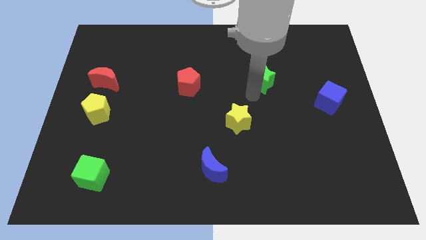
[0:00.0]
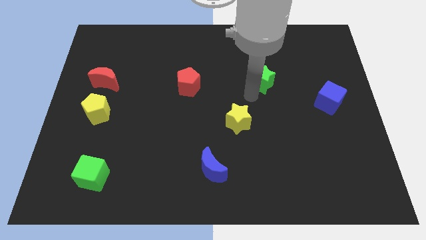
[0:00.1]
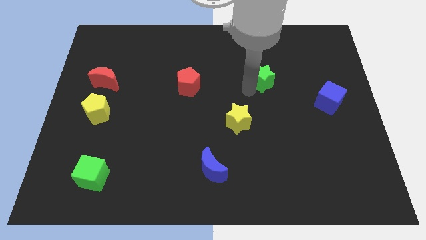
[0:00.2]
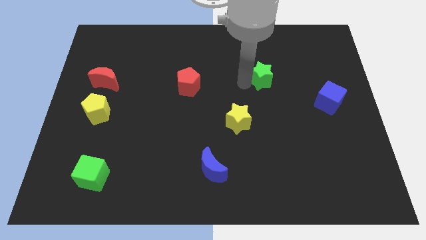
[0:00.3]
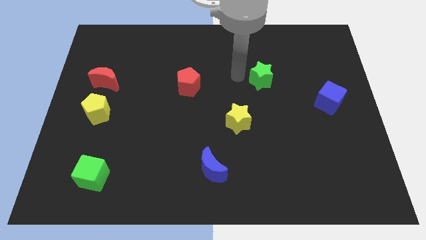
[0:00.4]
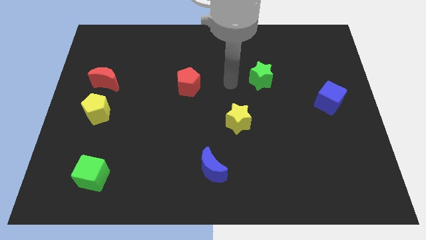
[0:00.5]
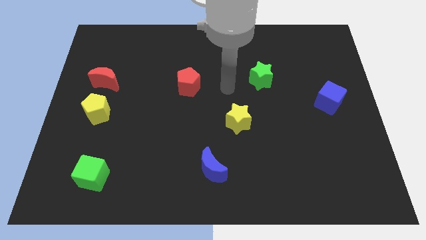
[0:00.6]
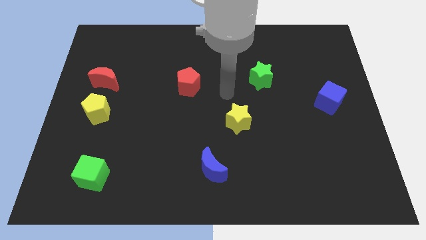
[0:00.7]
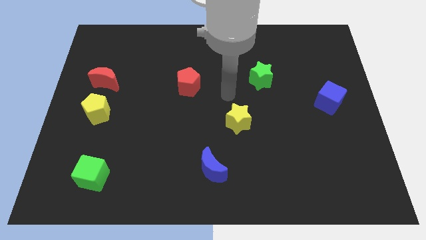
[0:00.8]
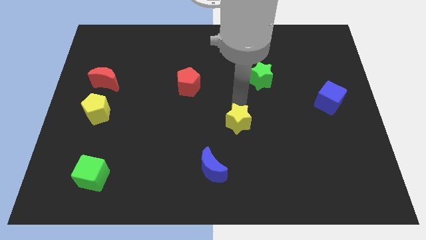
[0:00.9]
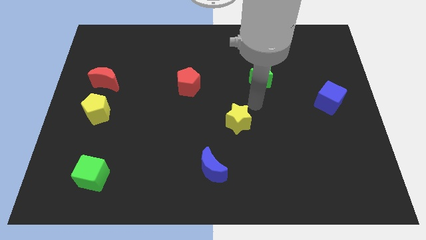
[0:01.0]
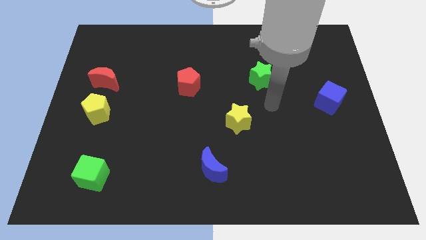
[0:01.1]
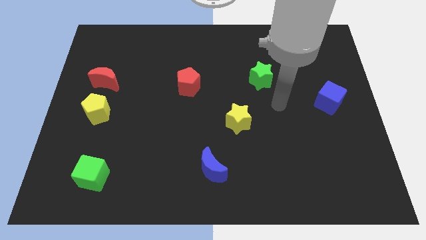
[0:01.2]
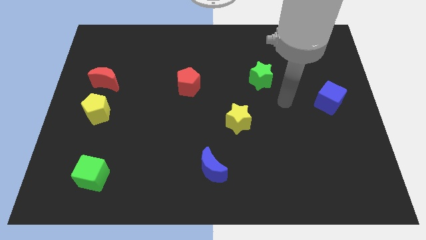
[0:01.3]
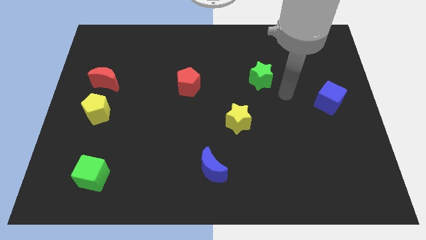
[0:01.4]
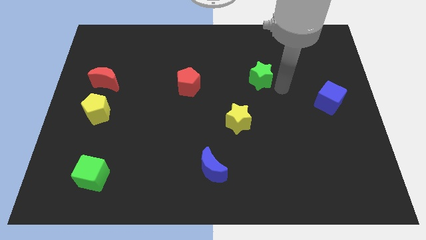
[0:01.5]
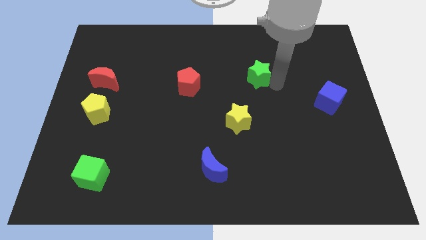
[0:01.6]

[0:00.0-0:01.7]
move your arm to the right of the green star

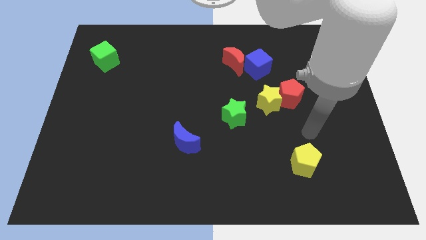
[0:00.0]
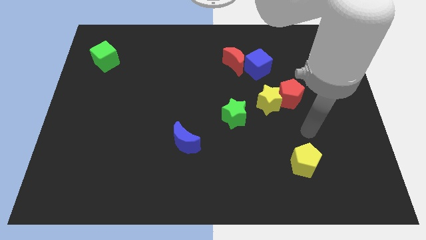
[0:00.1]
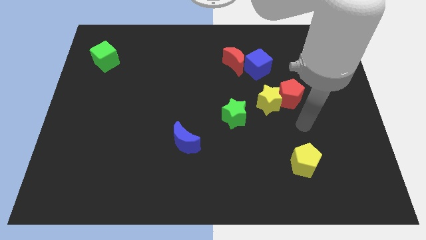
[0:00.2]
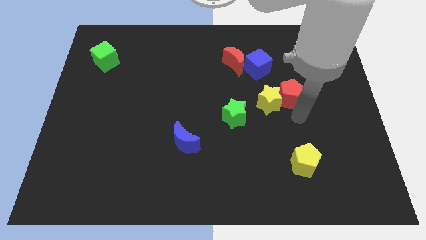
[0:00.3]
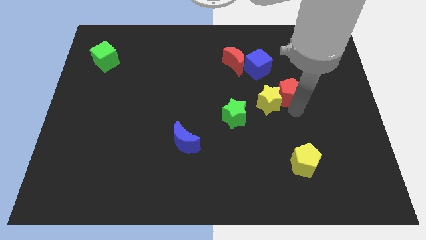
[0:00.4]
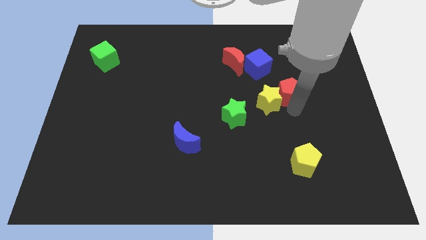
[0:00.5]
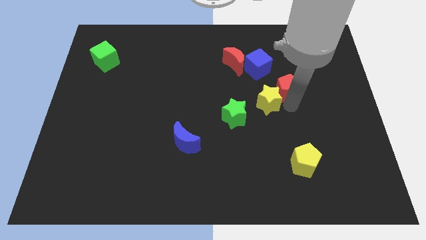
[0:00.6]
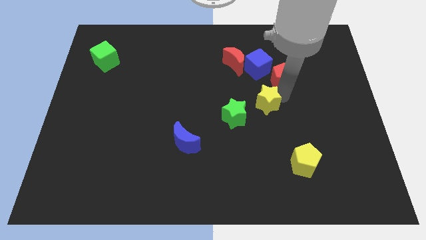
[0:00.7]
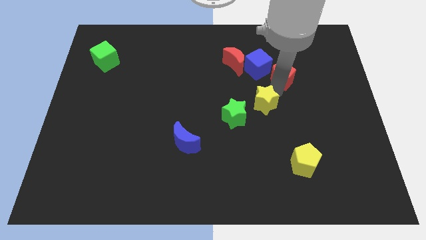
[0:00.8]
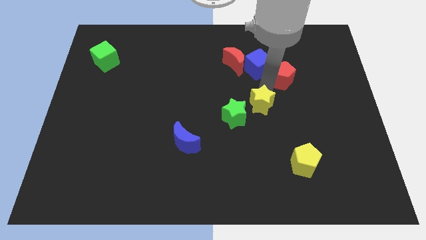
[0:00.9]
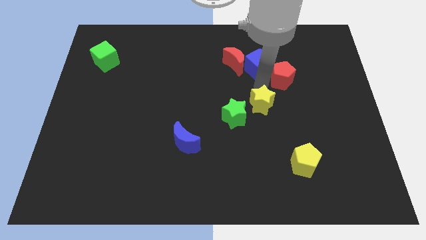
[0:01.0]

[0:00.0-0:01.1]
push the red pentagon slightly to the top

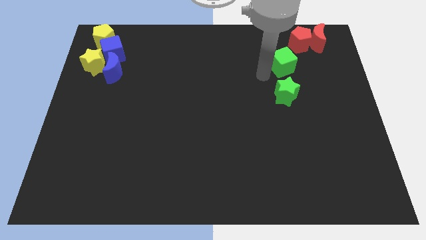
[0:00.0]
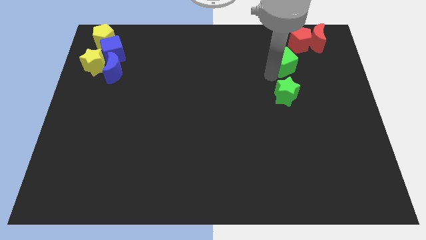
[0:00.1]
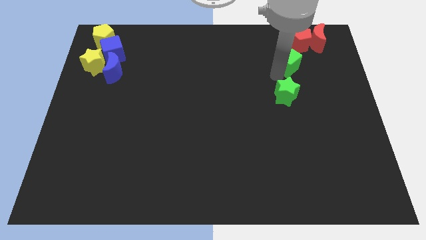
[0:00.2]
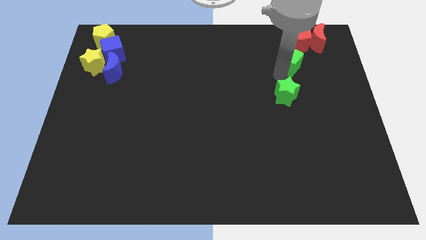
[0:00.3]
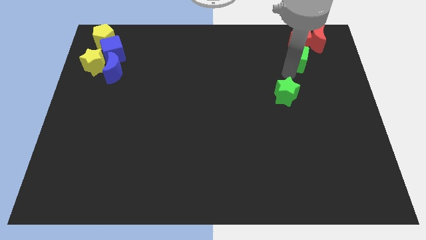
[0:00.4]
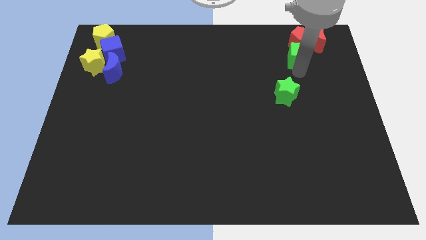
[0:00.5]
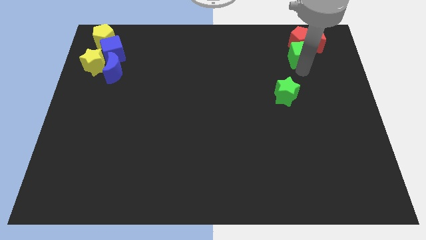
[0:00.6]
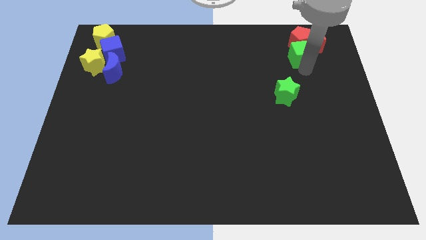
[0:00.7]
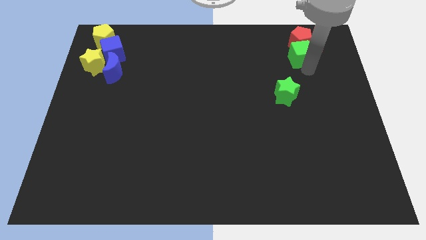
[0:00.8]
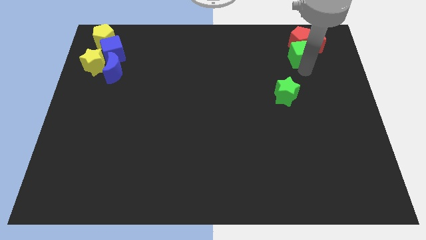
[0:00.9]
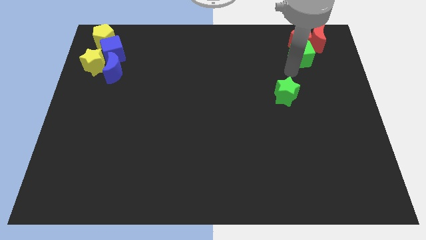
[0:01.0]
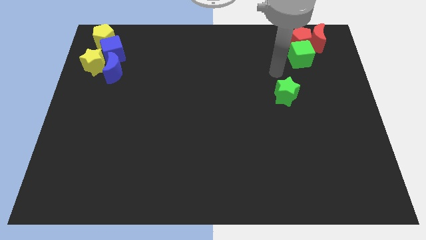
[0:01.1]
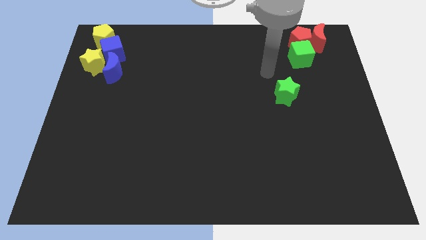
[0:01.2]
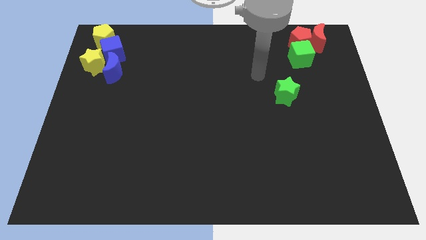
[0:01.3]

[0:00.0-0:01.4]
separate green blocks

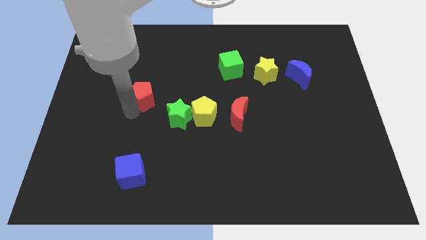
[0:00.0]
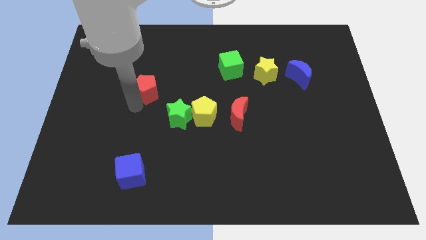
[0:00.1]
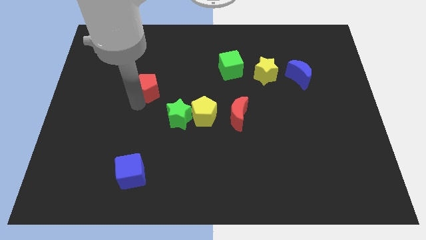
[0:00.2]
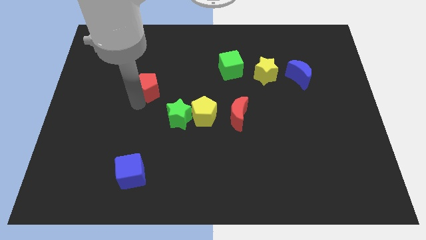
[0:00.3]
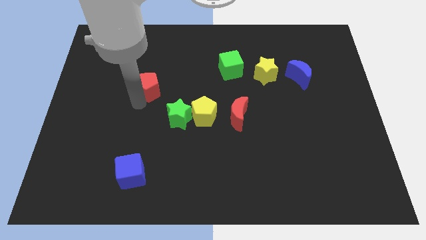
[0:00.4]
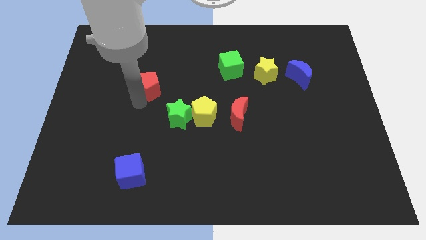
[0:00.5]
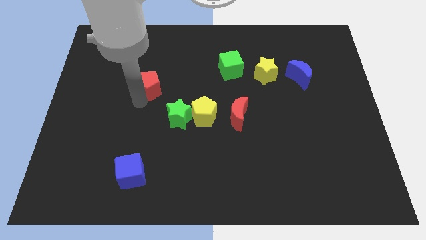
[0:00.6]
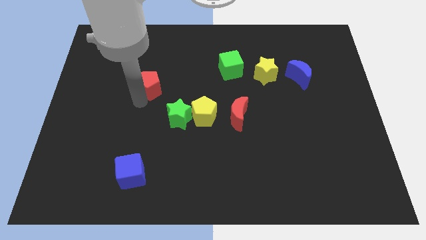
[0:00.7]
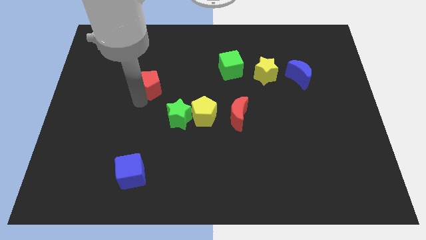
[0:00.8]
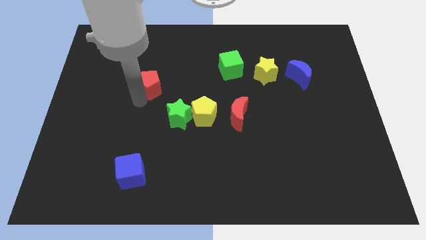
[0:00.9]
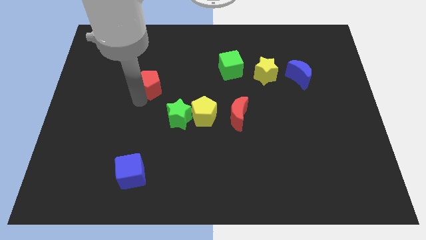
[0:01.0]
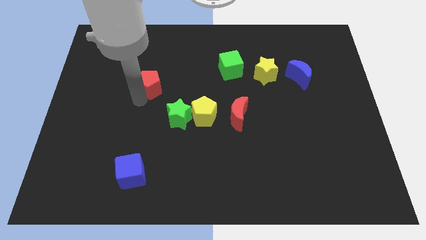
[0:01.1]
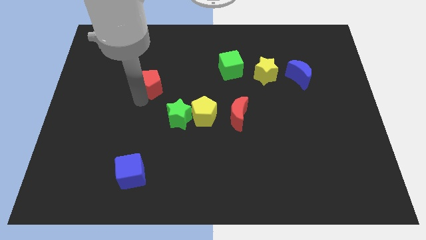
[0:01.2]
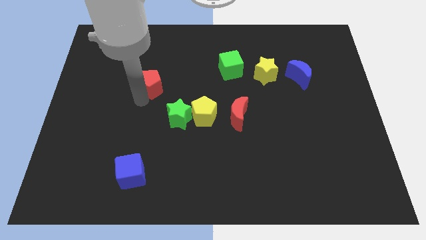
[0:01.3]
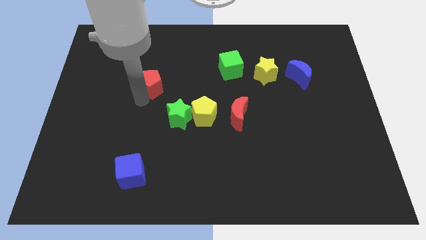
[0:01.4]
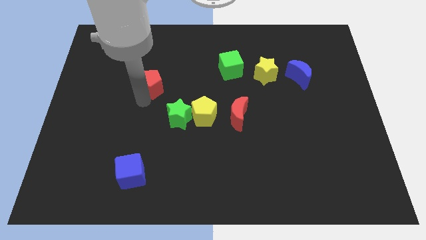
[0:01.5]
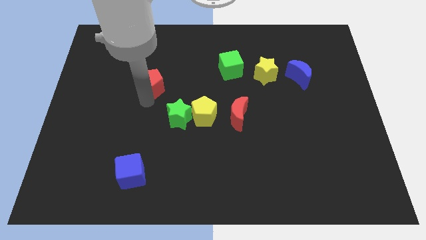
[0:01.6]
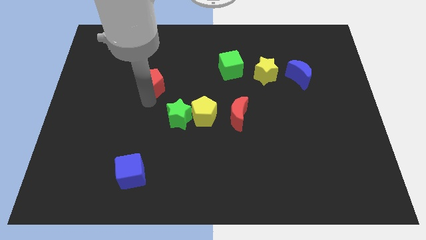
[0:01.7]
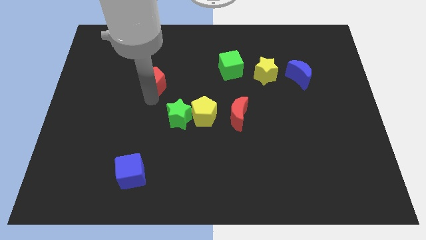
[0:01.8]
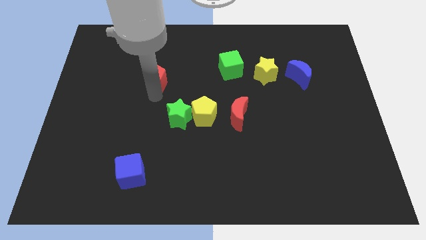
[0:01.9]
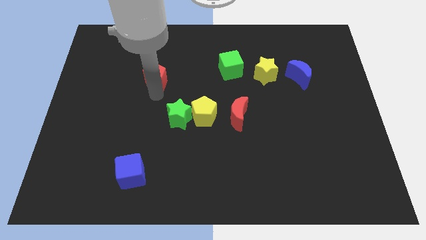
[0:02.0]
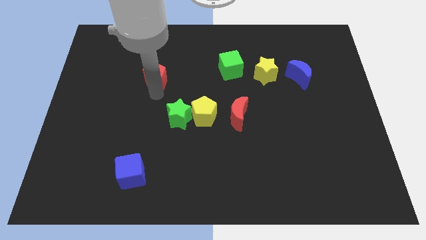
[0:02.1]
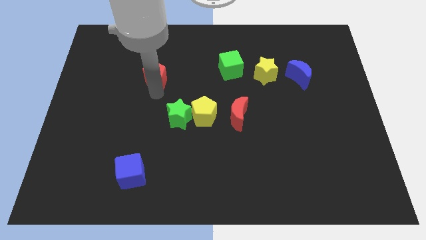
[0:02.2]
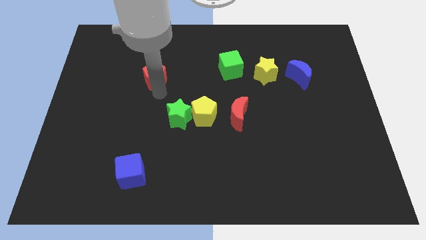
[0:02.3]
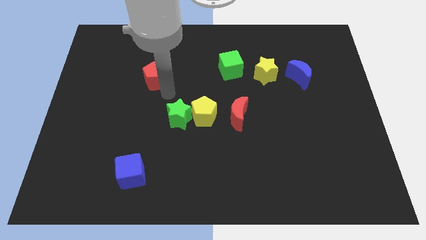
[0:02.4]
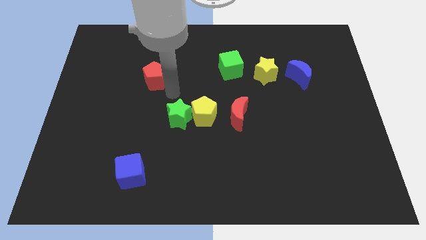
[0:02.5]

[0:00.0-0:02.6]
slide the red pentagon to the top

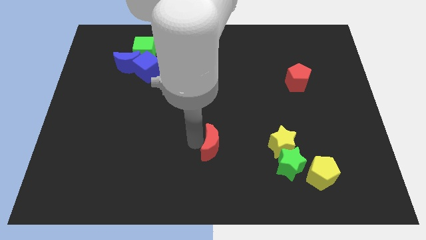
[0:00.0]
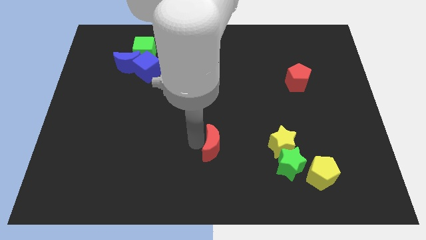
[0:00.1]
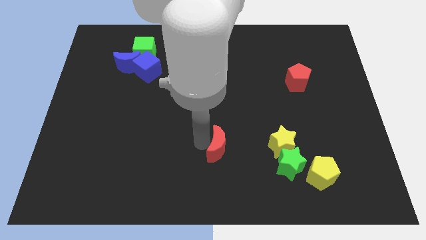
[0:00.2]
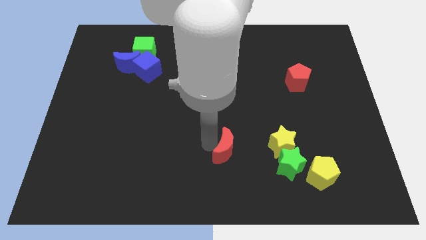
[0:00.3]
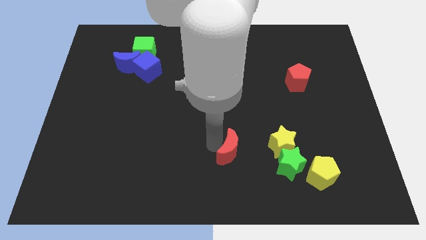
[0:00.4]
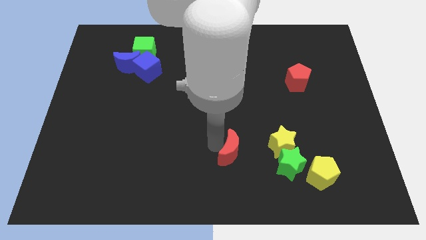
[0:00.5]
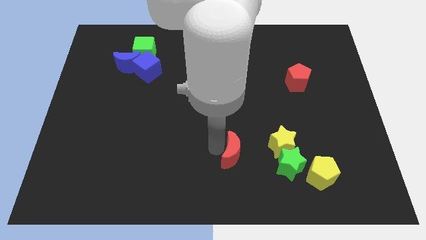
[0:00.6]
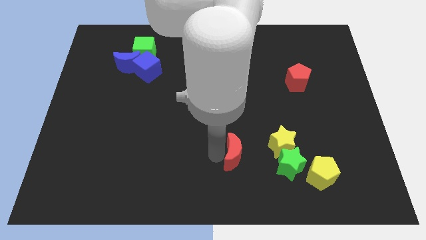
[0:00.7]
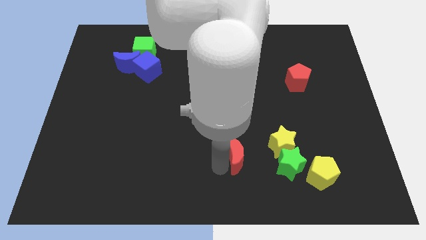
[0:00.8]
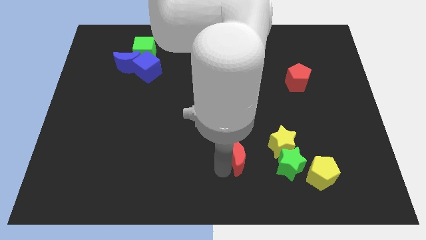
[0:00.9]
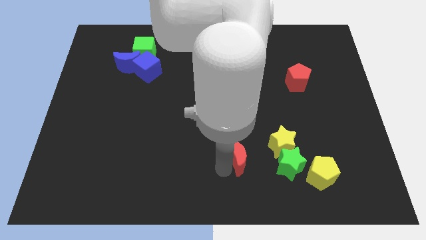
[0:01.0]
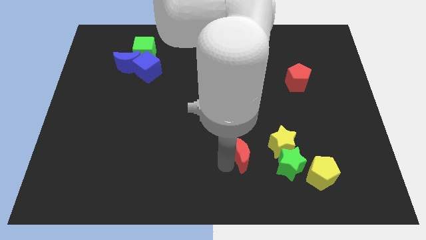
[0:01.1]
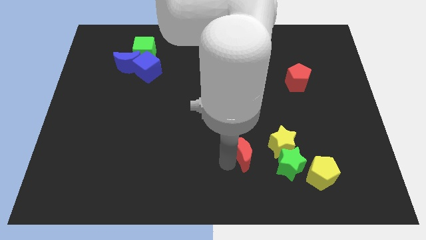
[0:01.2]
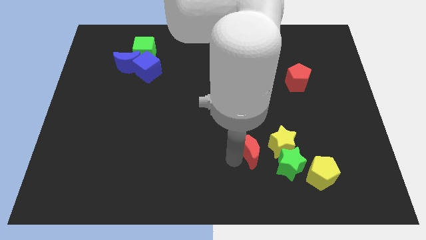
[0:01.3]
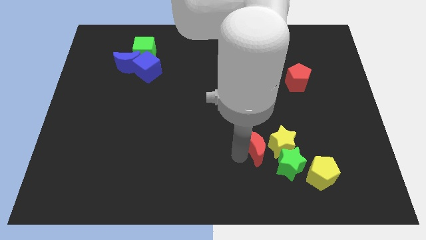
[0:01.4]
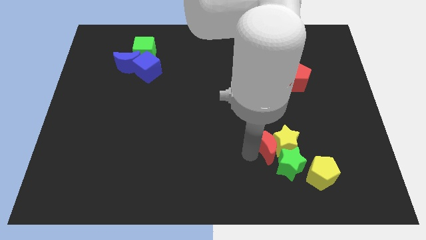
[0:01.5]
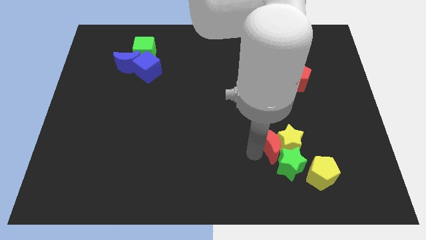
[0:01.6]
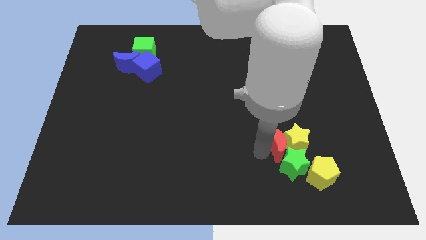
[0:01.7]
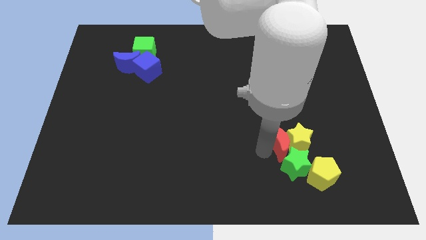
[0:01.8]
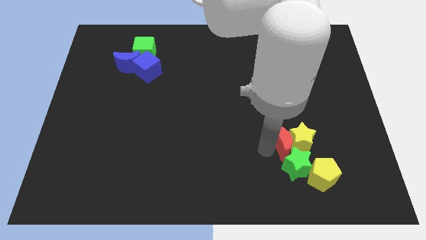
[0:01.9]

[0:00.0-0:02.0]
move red moon into group of blocks

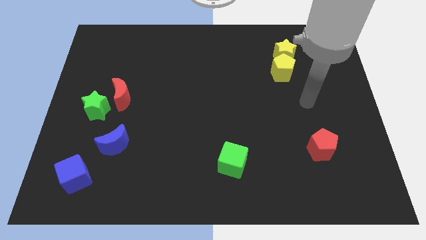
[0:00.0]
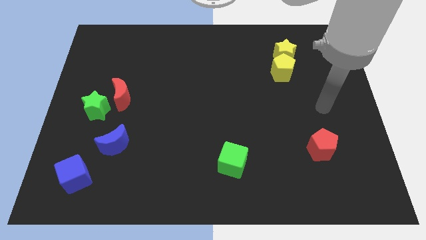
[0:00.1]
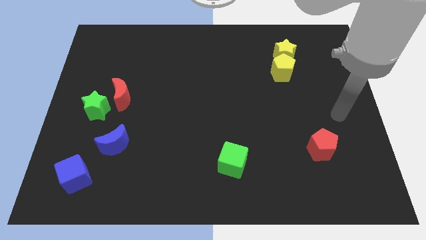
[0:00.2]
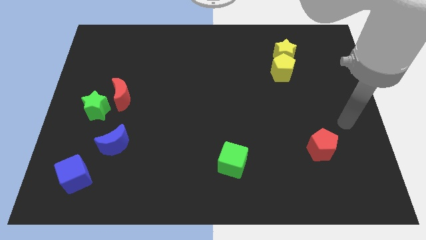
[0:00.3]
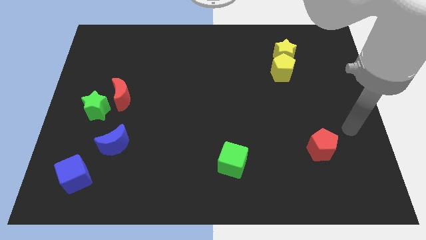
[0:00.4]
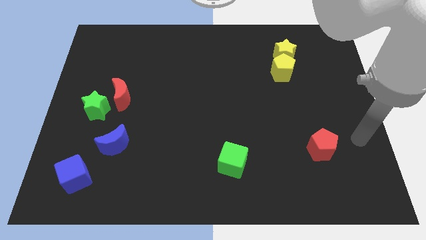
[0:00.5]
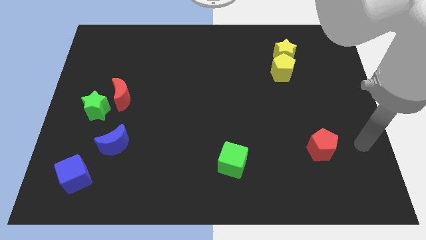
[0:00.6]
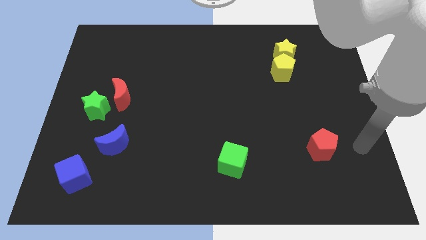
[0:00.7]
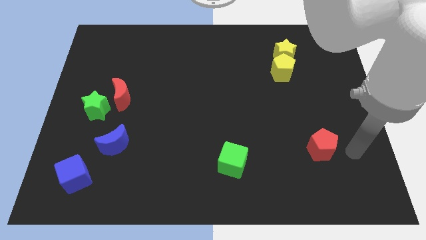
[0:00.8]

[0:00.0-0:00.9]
move the arm towards the red pentagon
